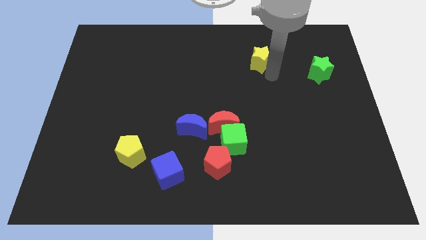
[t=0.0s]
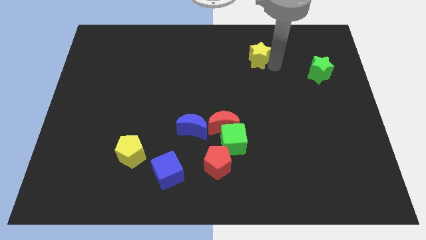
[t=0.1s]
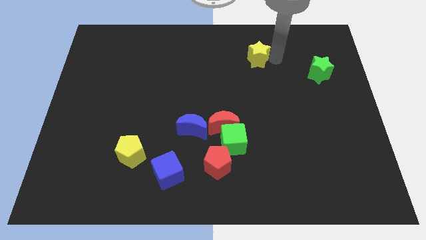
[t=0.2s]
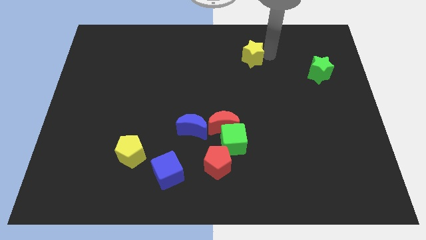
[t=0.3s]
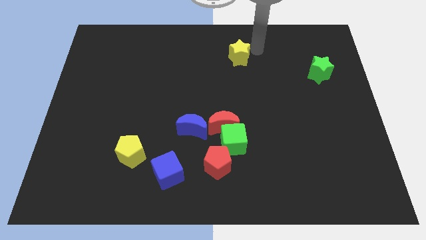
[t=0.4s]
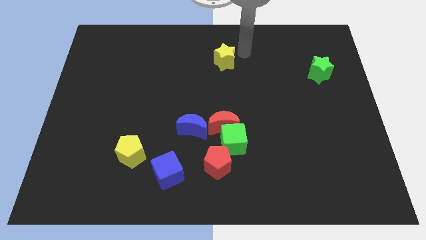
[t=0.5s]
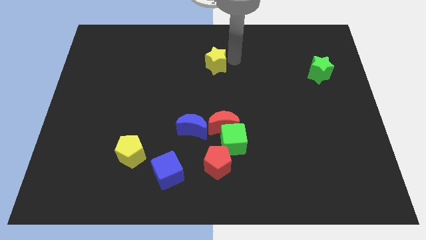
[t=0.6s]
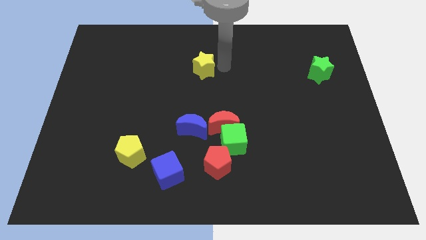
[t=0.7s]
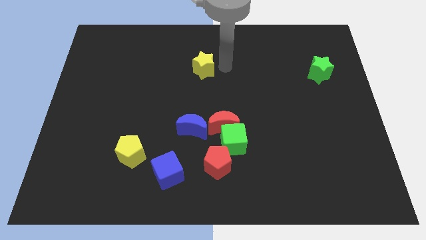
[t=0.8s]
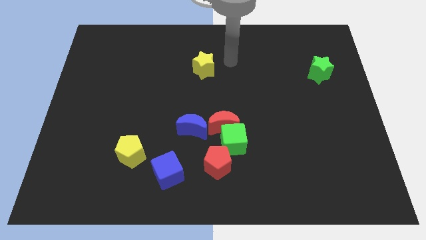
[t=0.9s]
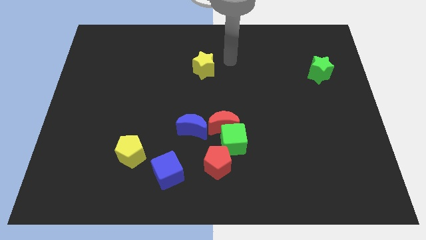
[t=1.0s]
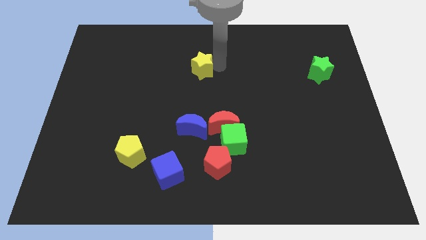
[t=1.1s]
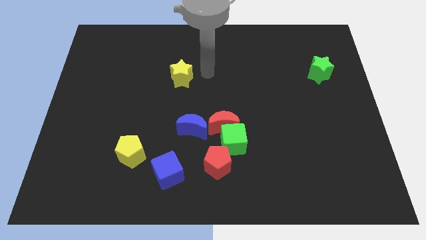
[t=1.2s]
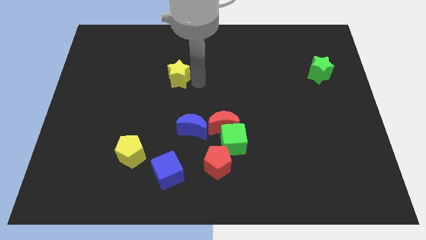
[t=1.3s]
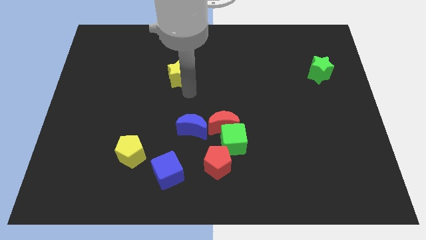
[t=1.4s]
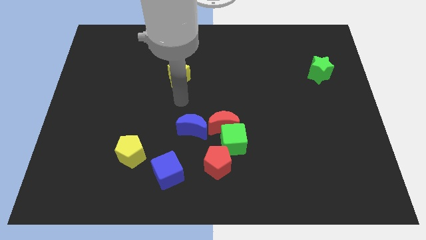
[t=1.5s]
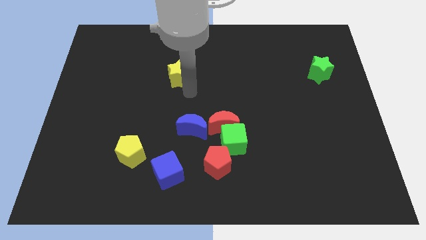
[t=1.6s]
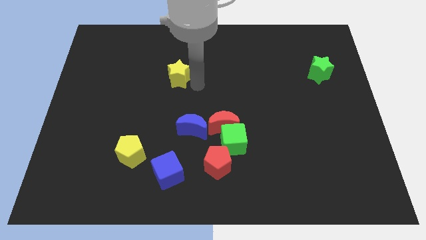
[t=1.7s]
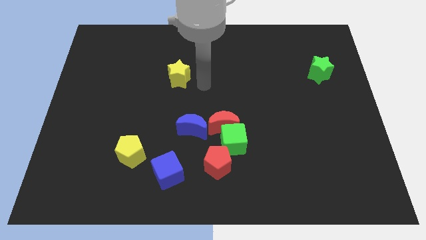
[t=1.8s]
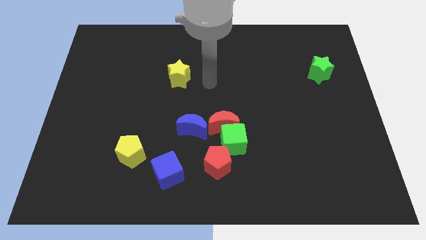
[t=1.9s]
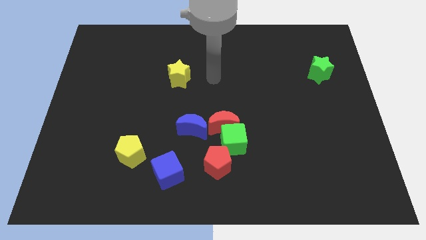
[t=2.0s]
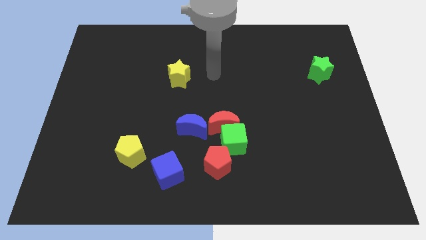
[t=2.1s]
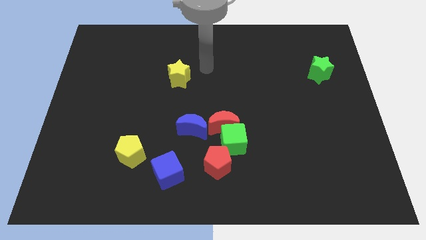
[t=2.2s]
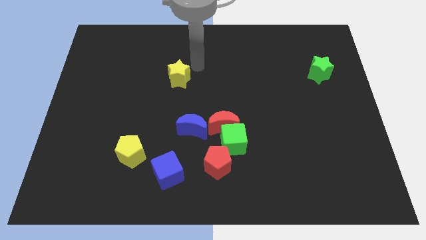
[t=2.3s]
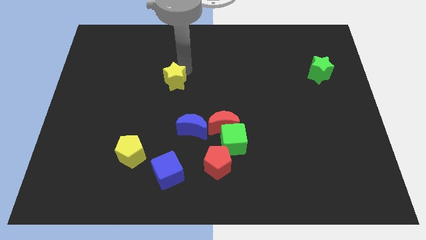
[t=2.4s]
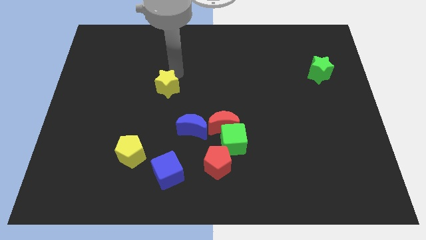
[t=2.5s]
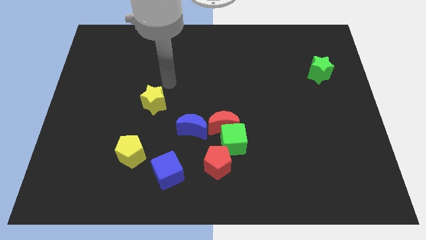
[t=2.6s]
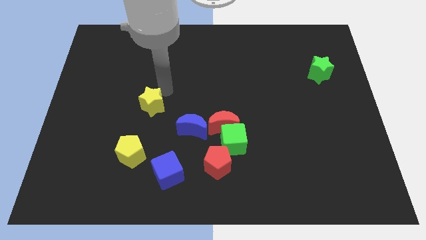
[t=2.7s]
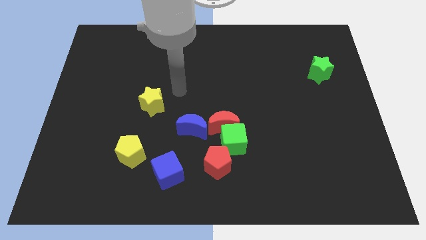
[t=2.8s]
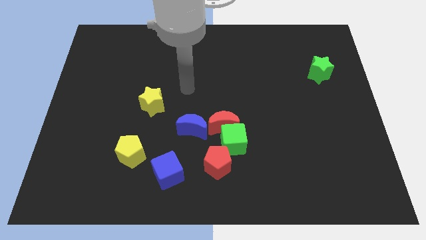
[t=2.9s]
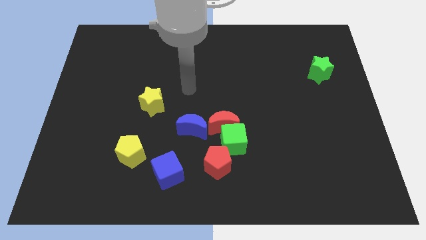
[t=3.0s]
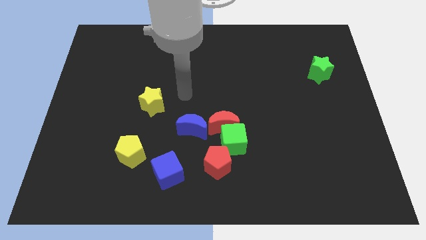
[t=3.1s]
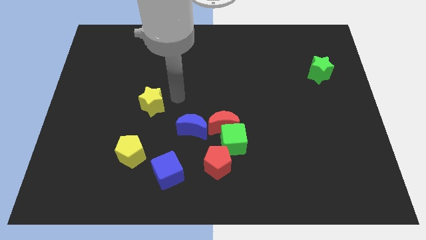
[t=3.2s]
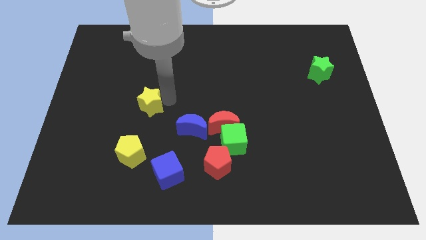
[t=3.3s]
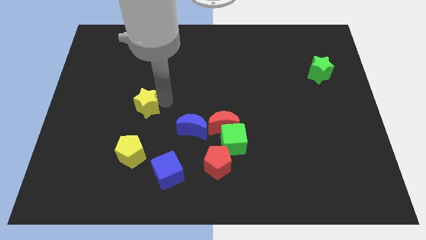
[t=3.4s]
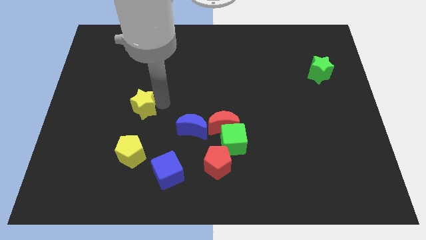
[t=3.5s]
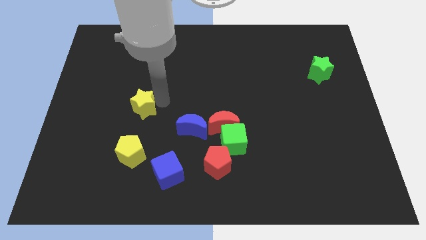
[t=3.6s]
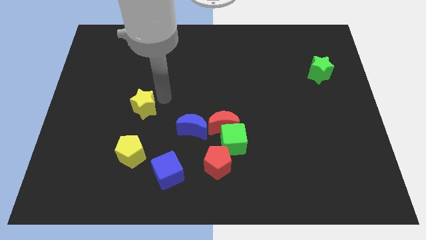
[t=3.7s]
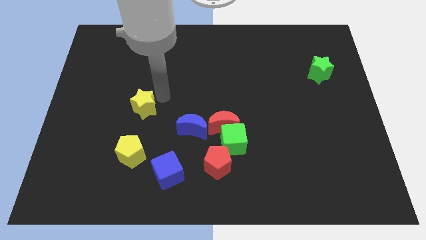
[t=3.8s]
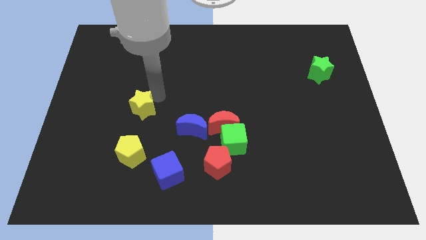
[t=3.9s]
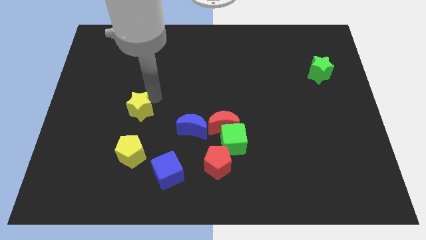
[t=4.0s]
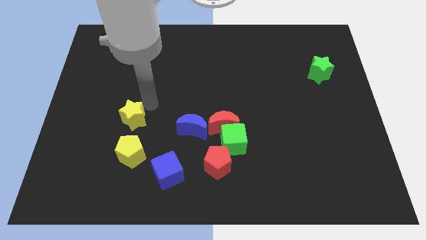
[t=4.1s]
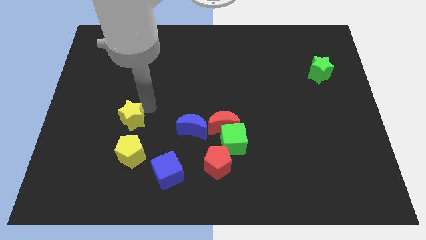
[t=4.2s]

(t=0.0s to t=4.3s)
push the yellow star vertically above the yellow pentagon

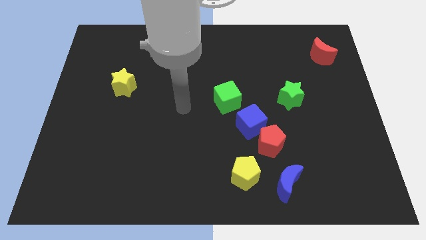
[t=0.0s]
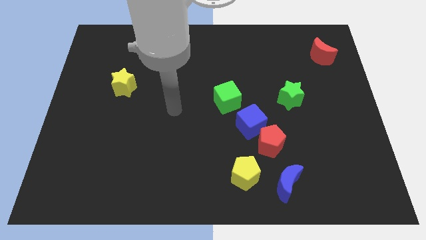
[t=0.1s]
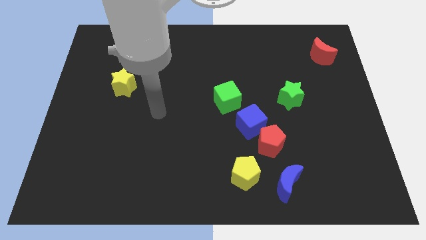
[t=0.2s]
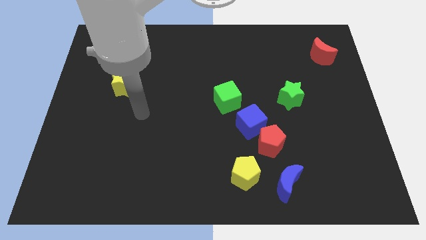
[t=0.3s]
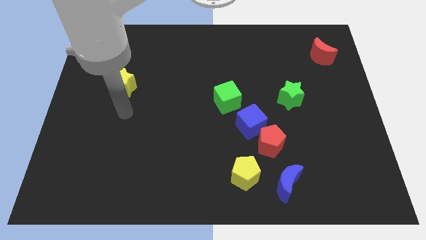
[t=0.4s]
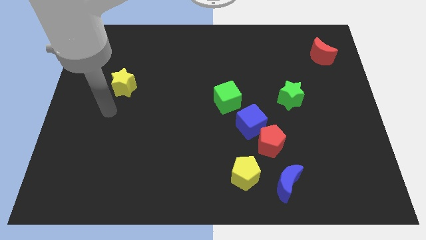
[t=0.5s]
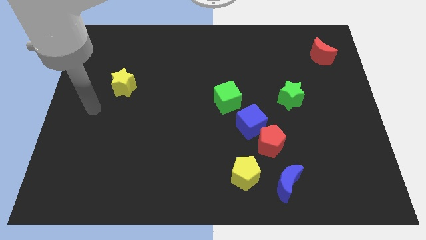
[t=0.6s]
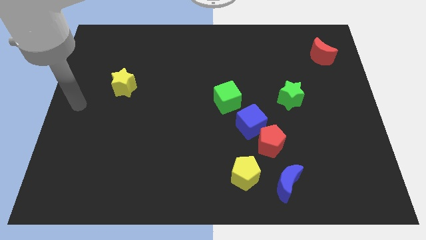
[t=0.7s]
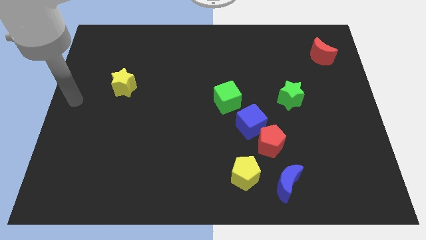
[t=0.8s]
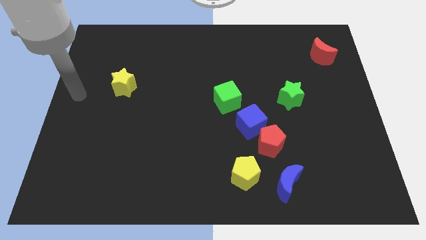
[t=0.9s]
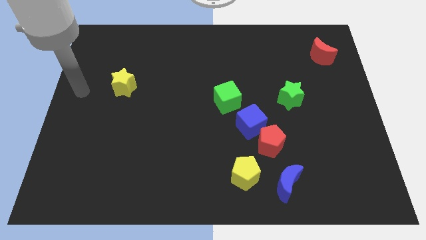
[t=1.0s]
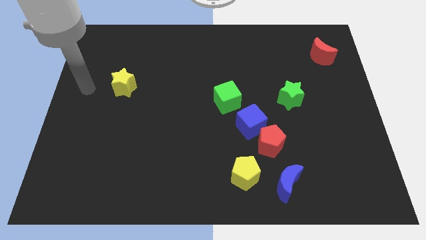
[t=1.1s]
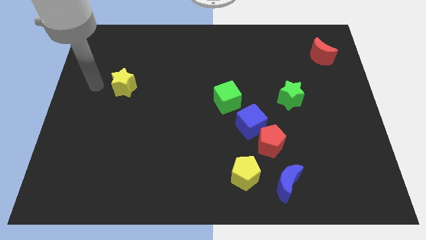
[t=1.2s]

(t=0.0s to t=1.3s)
point the arm to the left of the yellow star

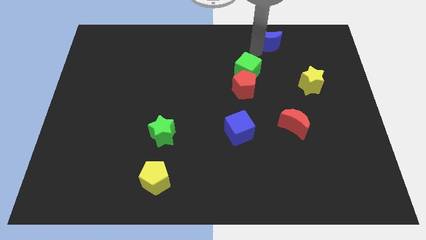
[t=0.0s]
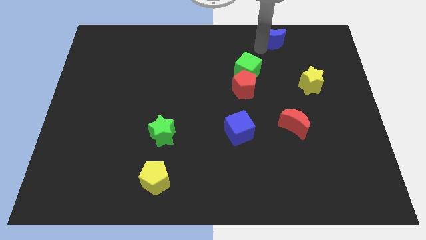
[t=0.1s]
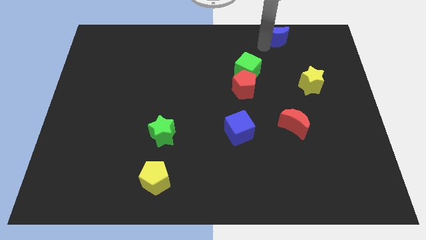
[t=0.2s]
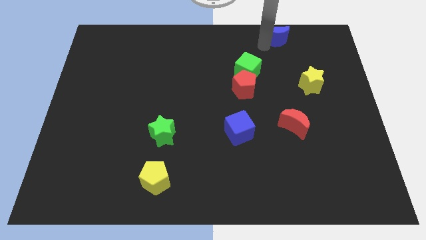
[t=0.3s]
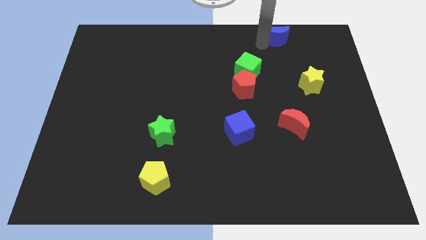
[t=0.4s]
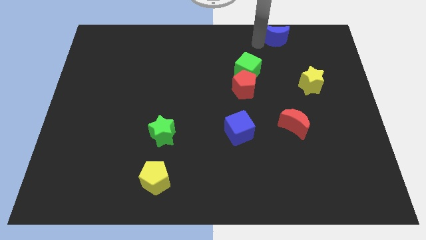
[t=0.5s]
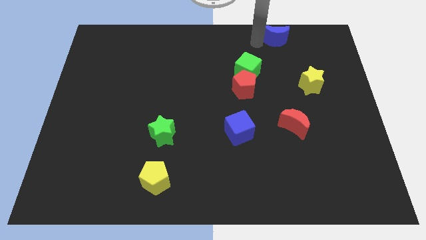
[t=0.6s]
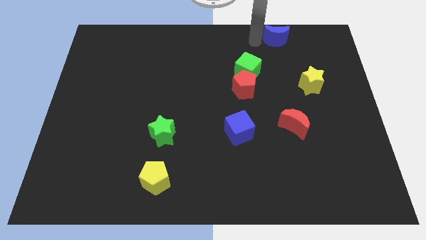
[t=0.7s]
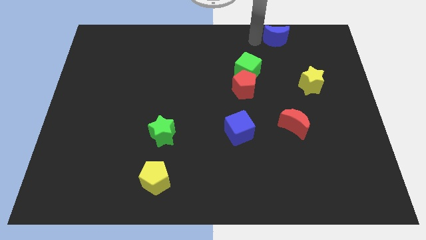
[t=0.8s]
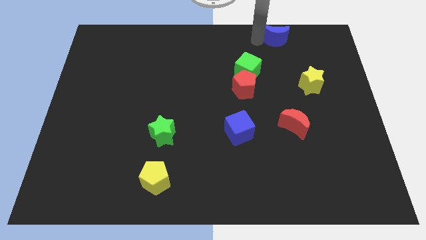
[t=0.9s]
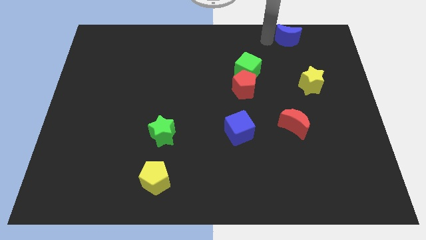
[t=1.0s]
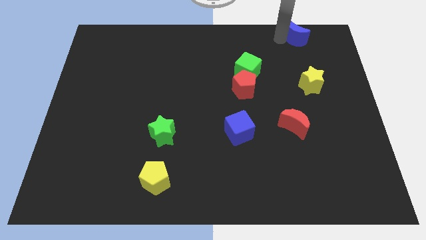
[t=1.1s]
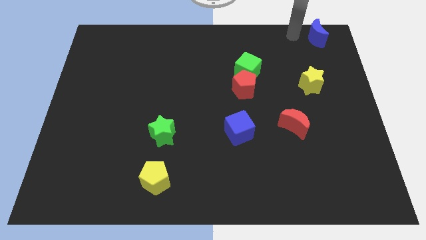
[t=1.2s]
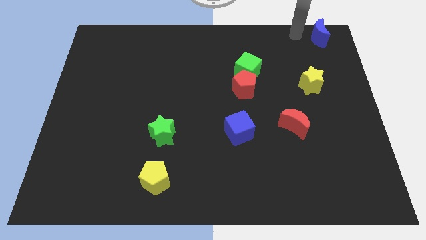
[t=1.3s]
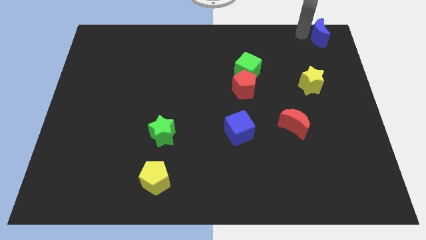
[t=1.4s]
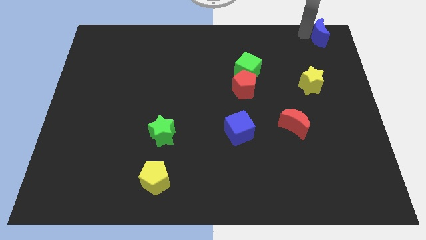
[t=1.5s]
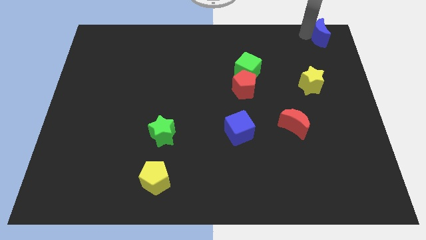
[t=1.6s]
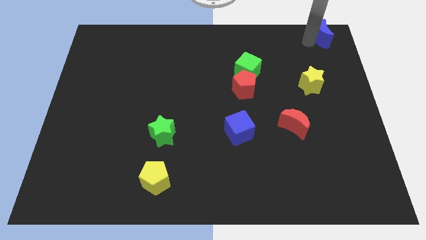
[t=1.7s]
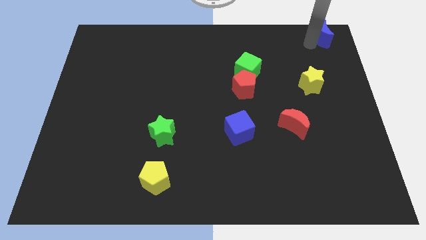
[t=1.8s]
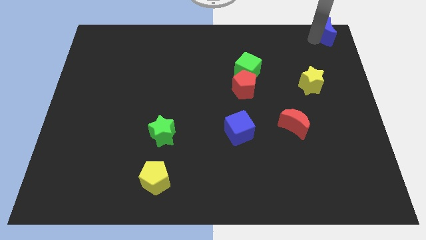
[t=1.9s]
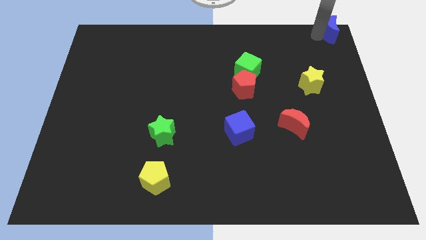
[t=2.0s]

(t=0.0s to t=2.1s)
place the blue moon diagonal to the red crescent

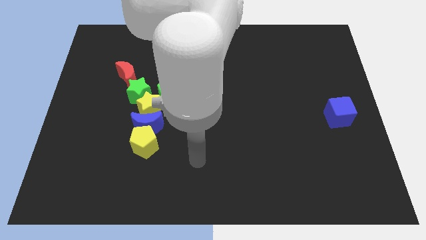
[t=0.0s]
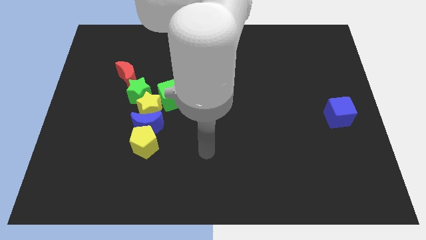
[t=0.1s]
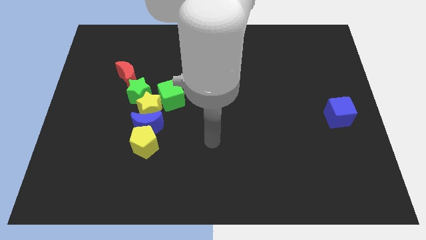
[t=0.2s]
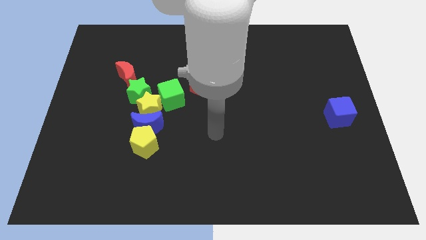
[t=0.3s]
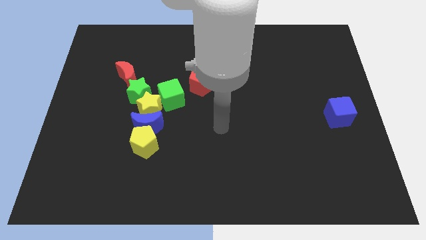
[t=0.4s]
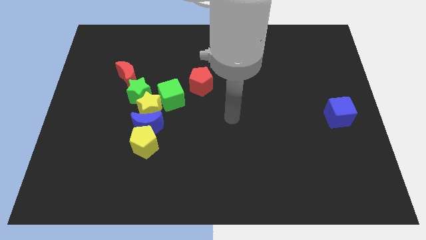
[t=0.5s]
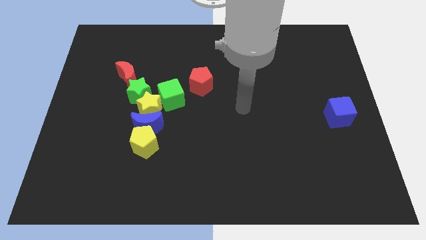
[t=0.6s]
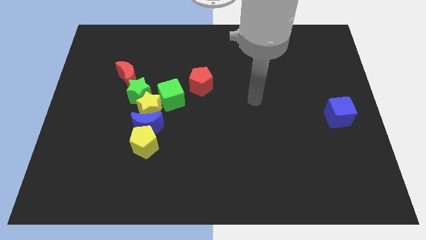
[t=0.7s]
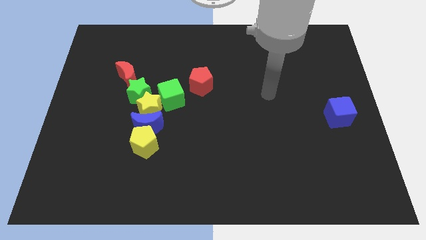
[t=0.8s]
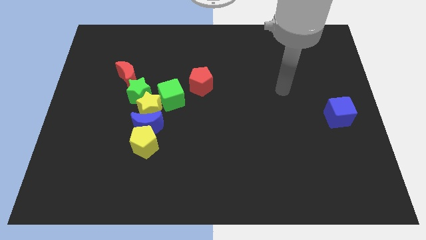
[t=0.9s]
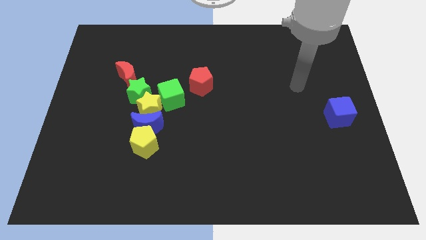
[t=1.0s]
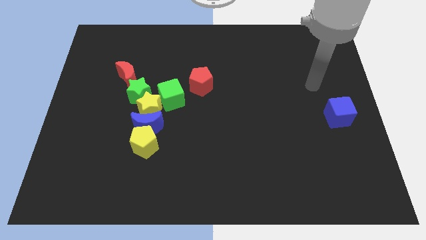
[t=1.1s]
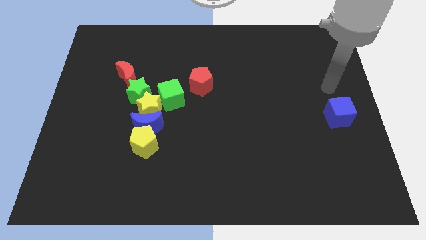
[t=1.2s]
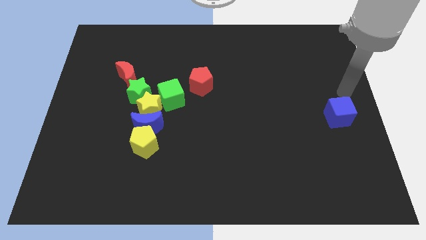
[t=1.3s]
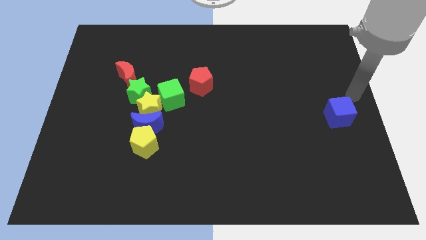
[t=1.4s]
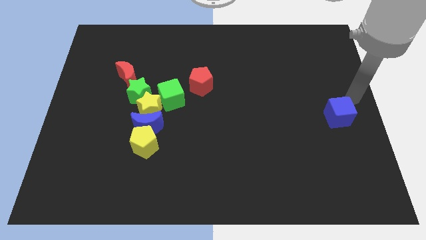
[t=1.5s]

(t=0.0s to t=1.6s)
move the arm to the right of the blue cube
